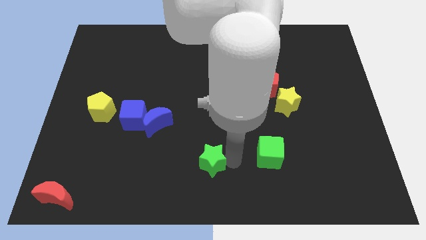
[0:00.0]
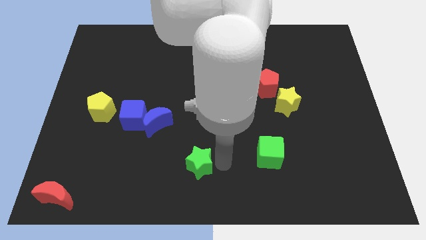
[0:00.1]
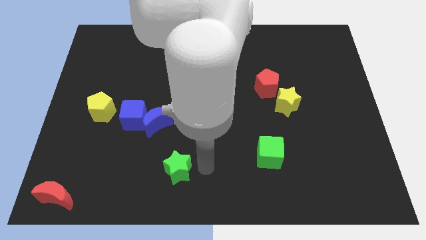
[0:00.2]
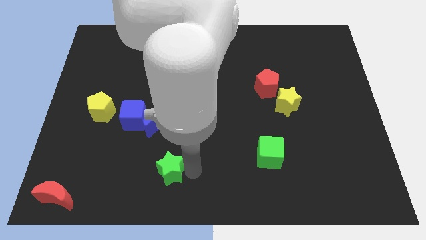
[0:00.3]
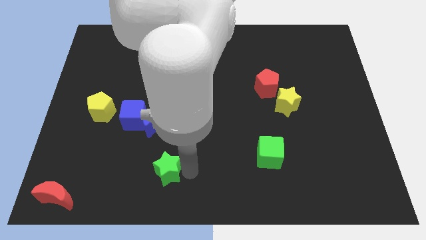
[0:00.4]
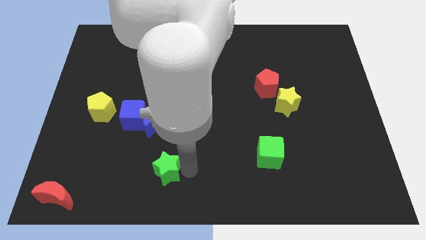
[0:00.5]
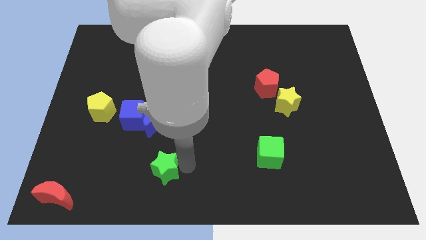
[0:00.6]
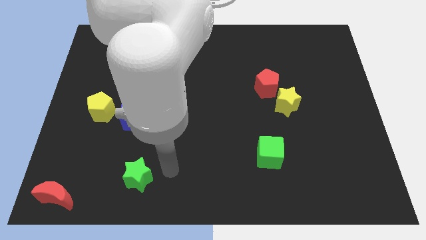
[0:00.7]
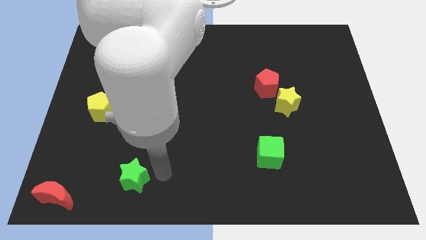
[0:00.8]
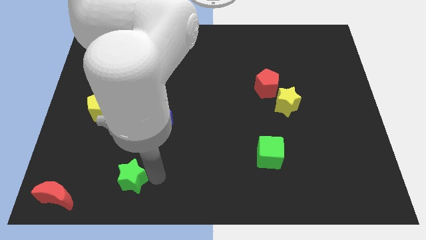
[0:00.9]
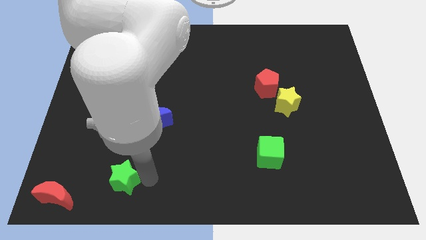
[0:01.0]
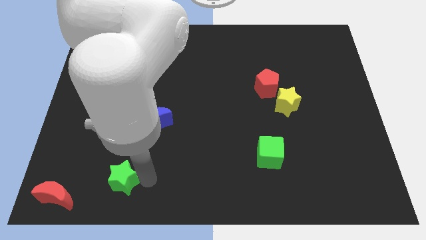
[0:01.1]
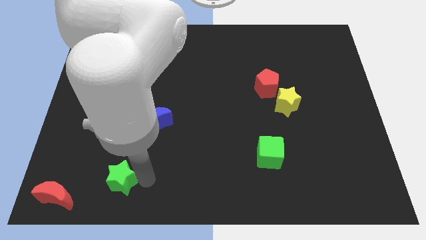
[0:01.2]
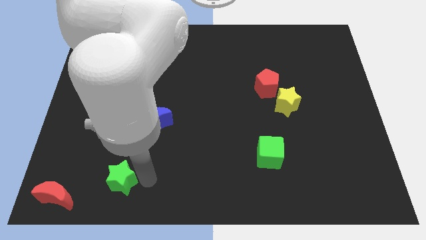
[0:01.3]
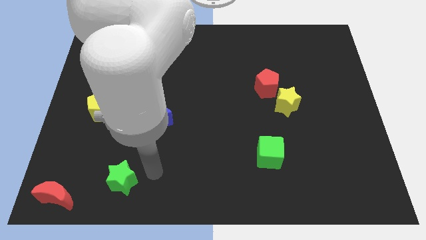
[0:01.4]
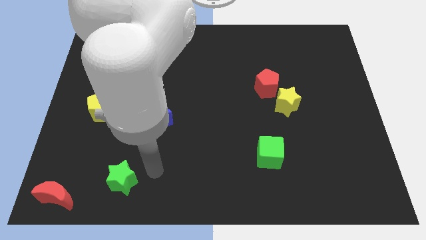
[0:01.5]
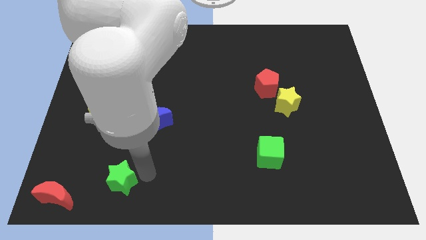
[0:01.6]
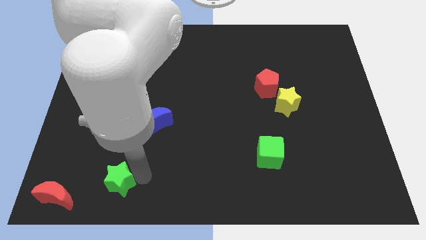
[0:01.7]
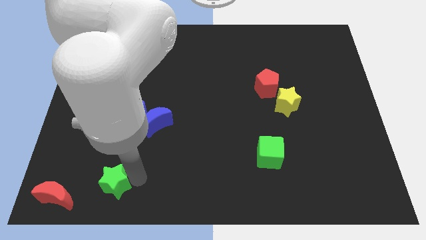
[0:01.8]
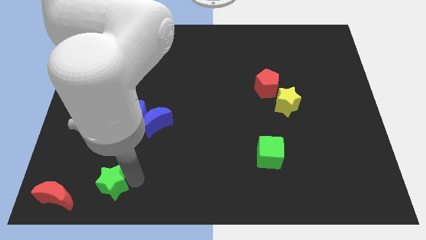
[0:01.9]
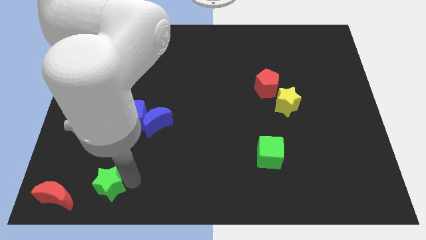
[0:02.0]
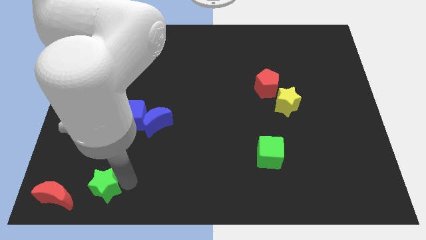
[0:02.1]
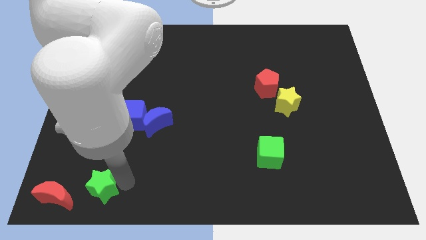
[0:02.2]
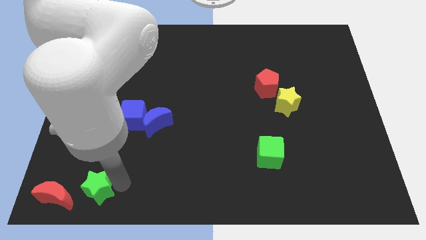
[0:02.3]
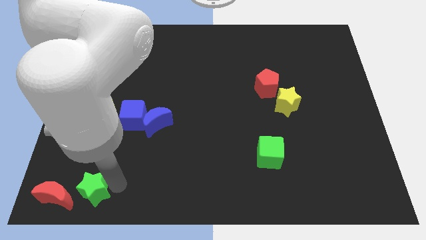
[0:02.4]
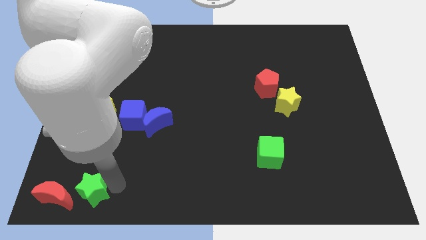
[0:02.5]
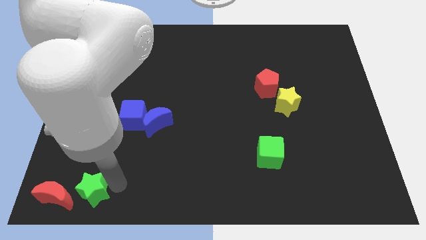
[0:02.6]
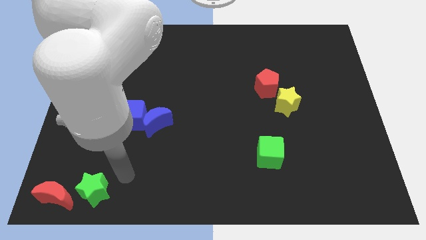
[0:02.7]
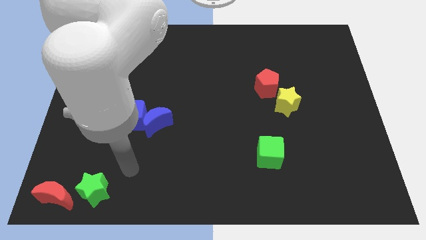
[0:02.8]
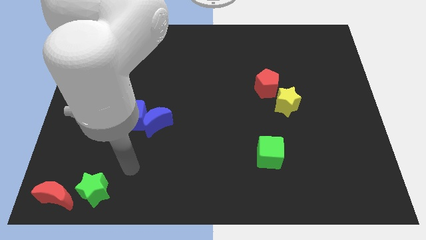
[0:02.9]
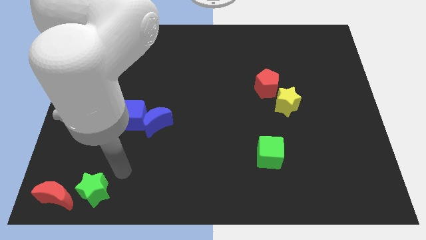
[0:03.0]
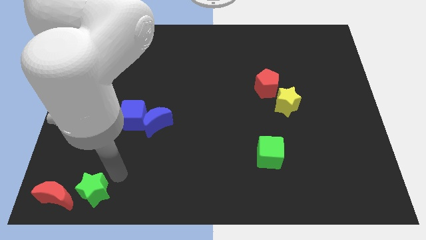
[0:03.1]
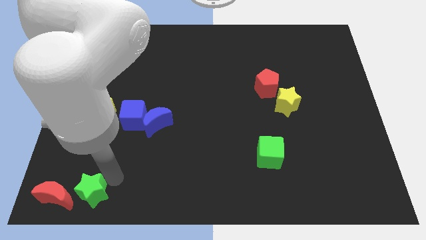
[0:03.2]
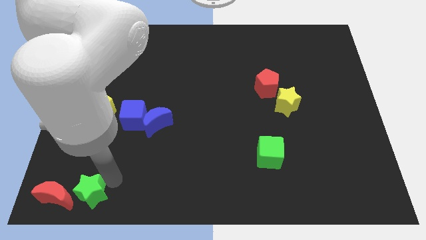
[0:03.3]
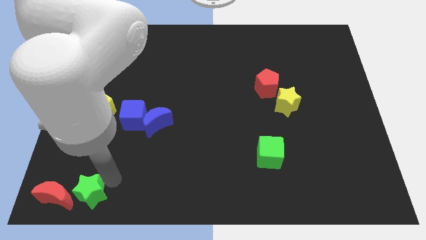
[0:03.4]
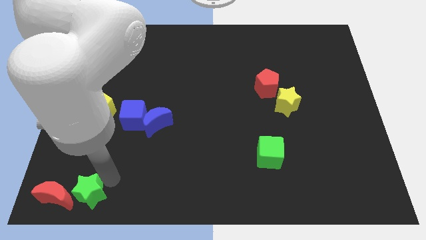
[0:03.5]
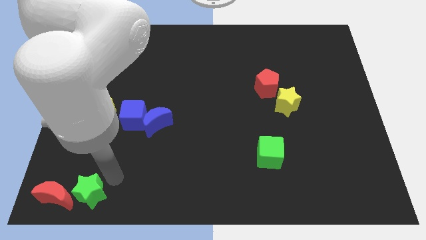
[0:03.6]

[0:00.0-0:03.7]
move the green star to the right side of the red moon

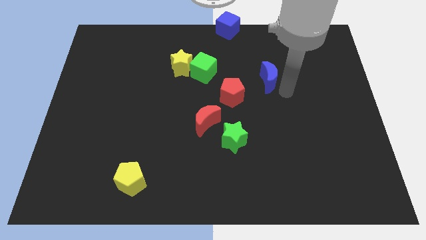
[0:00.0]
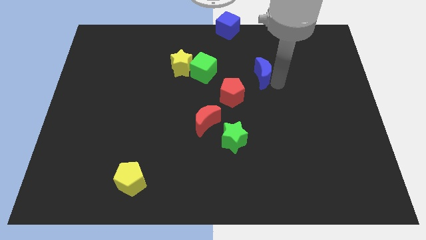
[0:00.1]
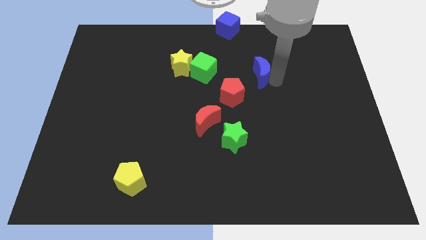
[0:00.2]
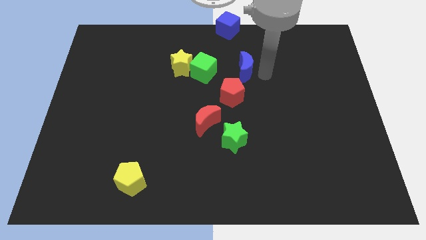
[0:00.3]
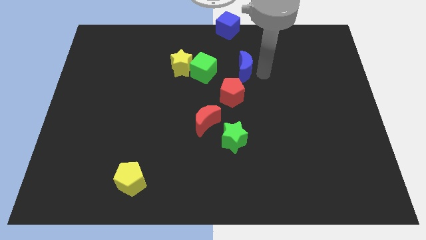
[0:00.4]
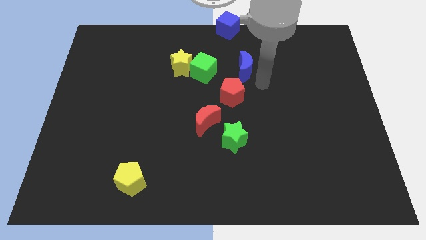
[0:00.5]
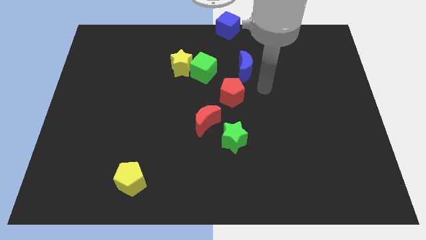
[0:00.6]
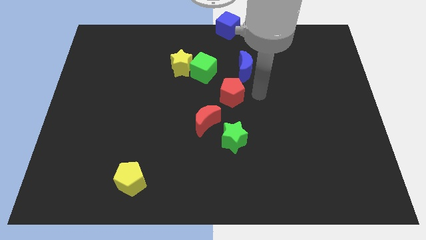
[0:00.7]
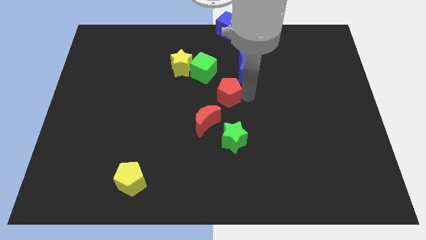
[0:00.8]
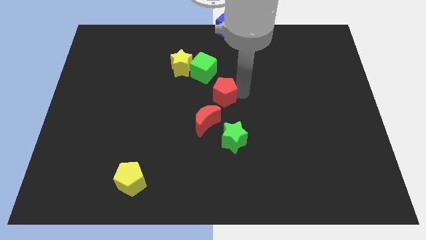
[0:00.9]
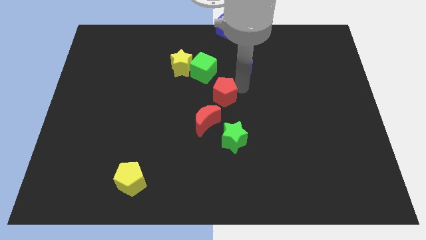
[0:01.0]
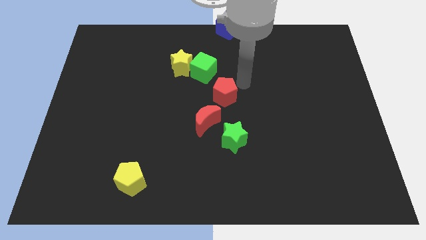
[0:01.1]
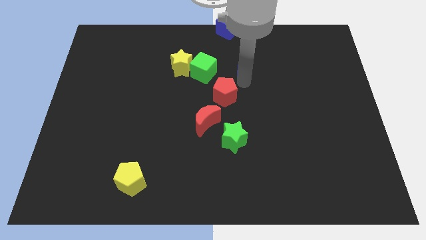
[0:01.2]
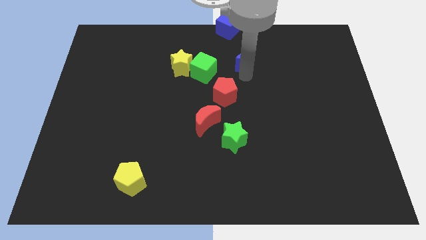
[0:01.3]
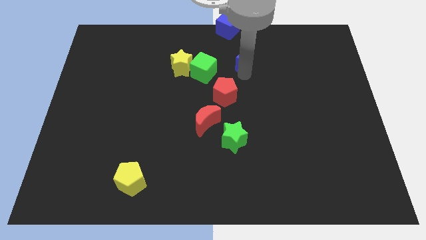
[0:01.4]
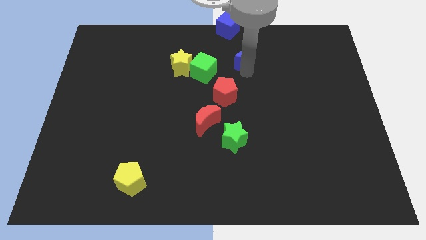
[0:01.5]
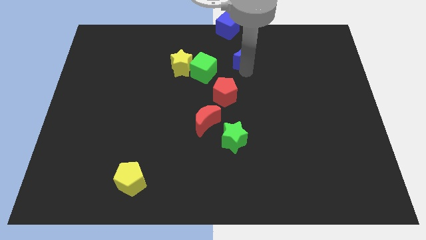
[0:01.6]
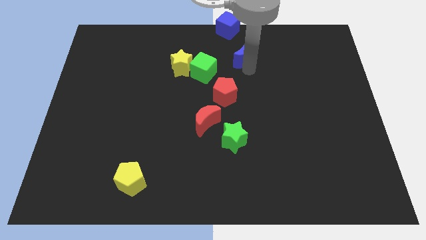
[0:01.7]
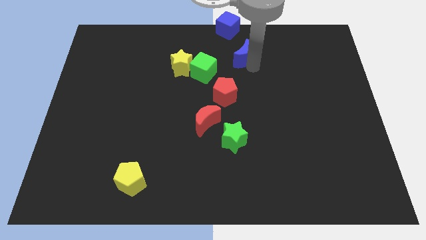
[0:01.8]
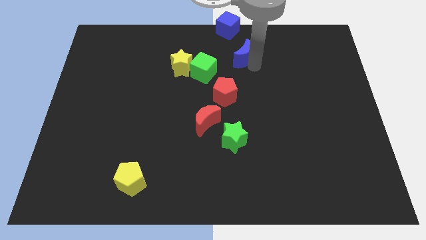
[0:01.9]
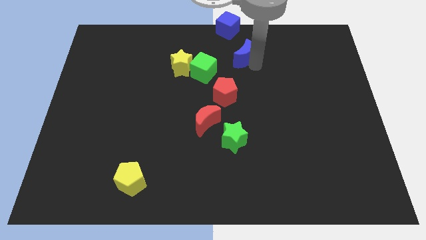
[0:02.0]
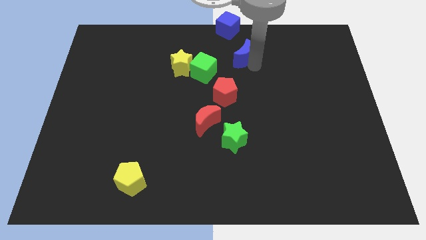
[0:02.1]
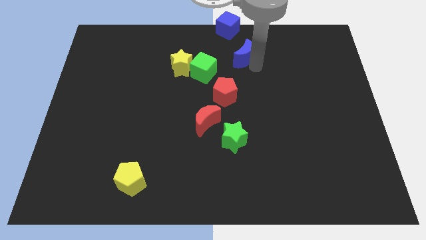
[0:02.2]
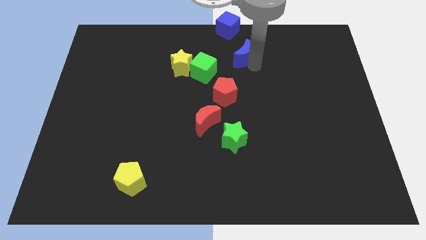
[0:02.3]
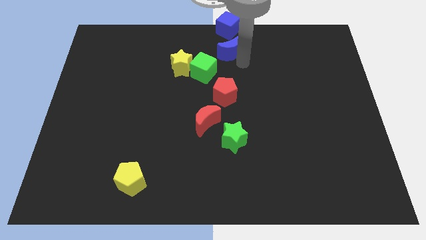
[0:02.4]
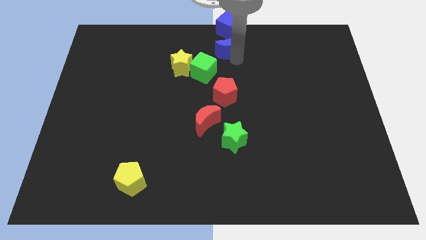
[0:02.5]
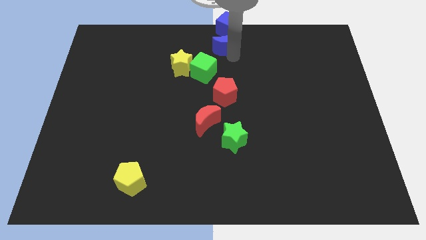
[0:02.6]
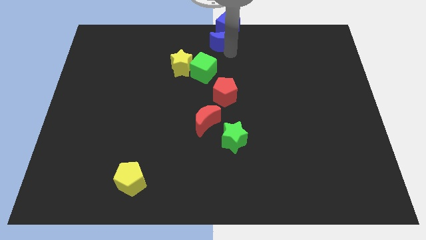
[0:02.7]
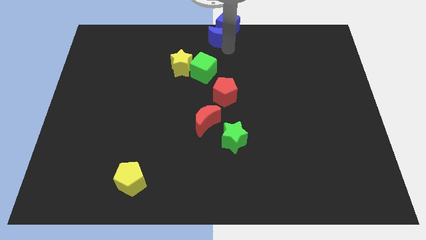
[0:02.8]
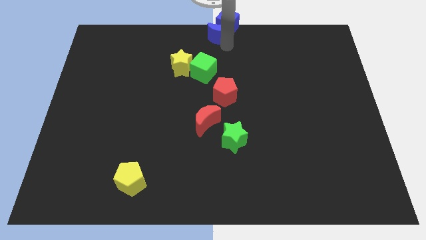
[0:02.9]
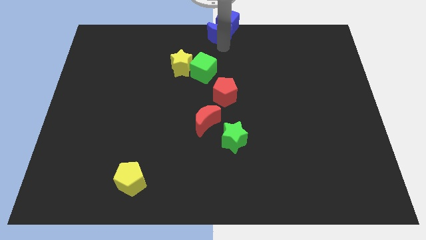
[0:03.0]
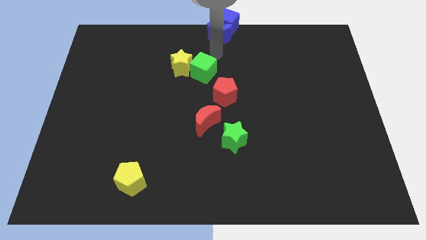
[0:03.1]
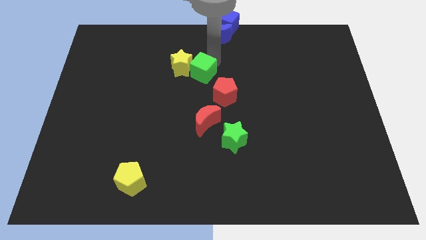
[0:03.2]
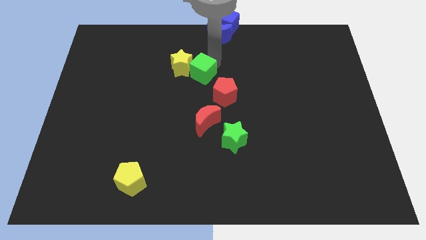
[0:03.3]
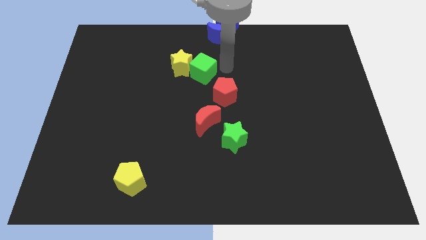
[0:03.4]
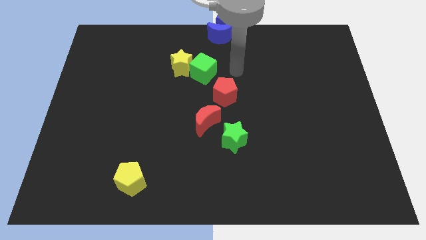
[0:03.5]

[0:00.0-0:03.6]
push blue crescent in to blue cube

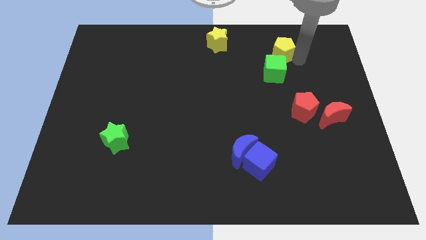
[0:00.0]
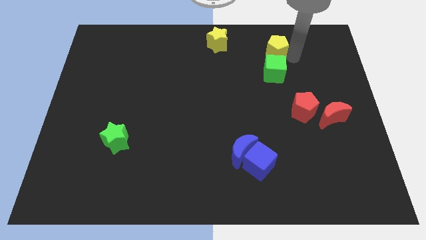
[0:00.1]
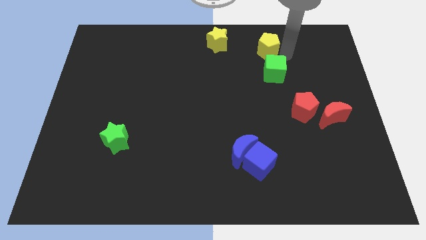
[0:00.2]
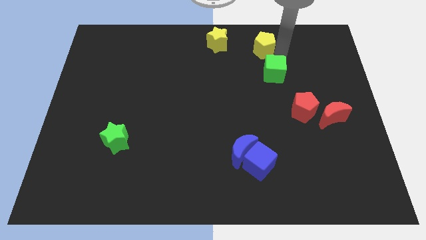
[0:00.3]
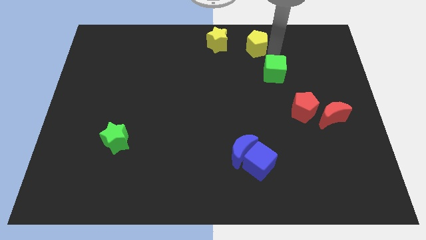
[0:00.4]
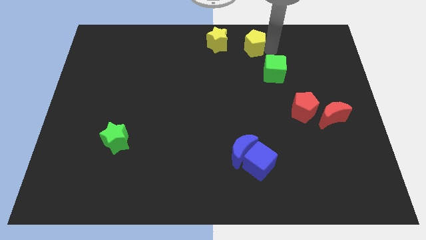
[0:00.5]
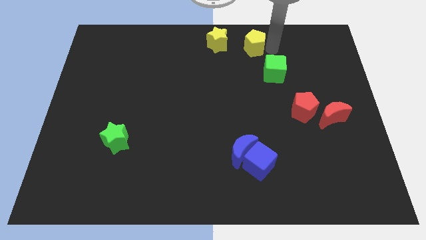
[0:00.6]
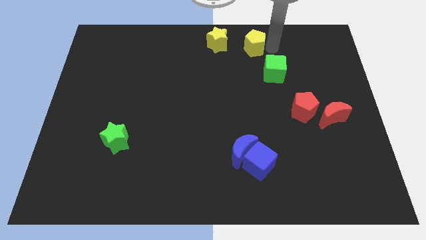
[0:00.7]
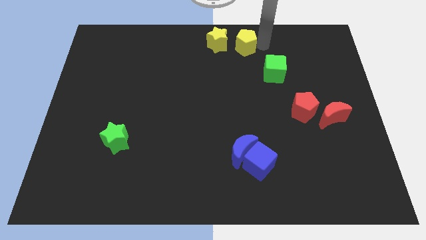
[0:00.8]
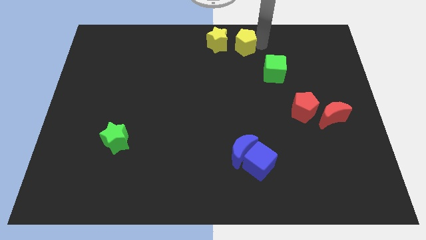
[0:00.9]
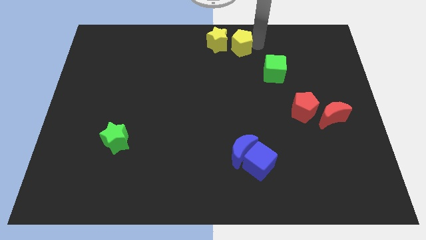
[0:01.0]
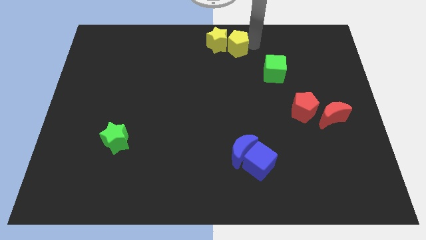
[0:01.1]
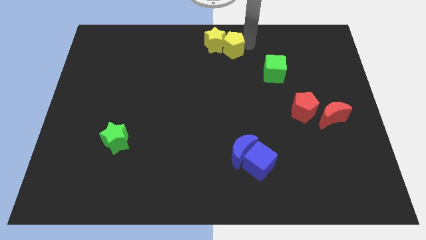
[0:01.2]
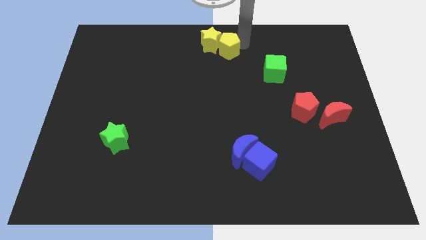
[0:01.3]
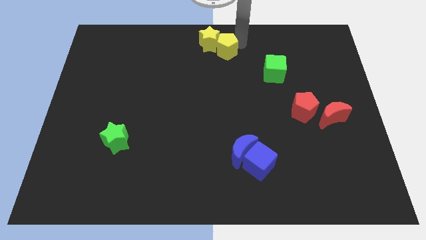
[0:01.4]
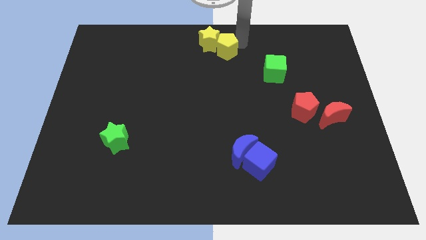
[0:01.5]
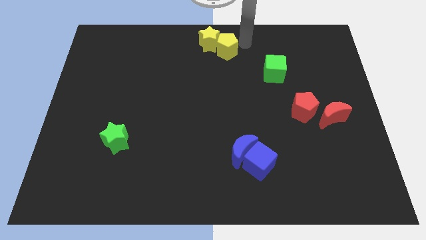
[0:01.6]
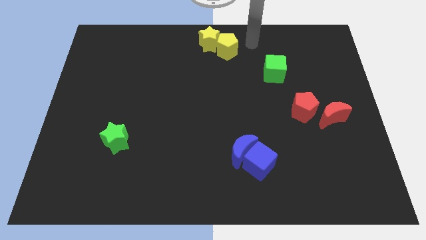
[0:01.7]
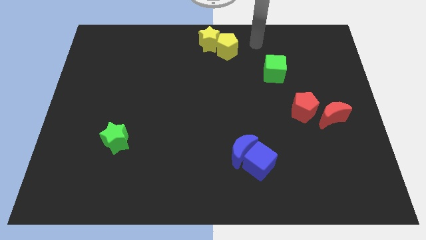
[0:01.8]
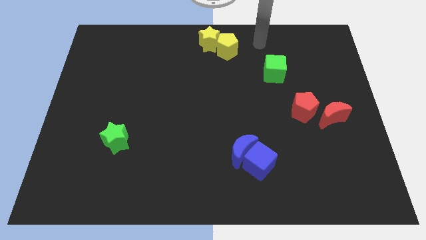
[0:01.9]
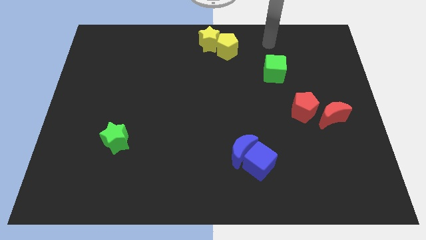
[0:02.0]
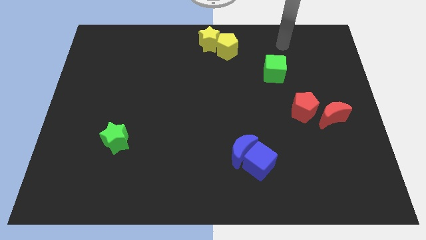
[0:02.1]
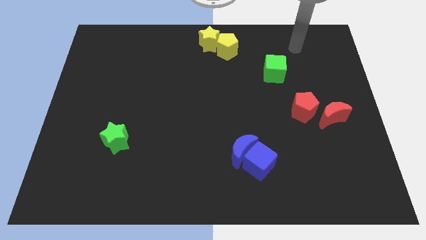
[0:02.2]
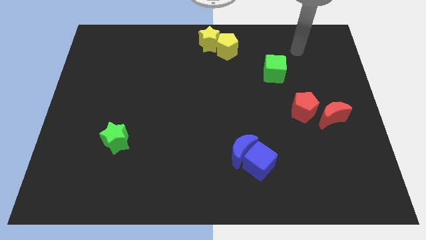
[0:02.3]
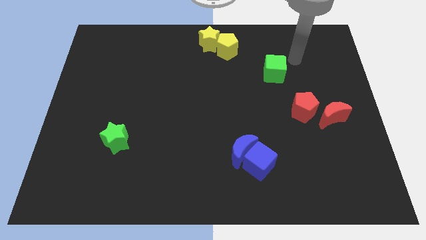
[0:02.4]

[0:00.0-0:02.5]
move the yellow penatgon close to yellow star
